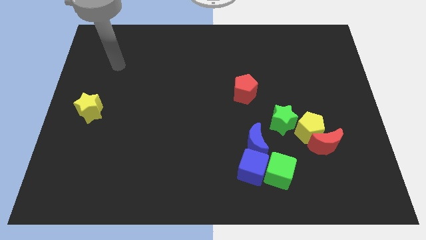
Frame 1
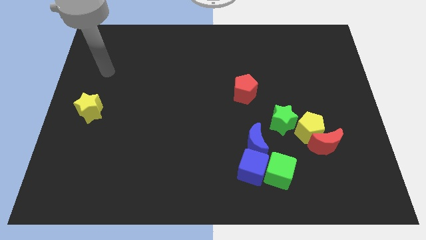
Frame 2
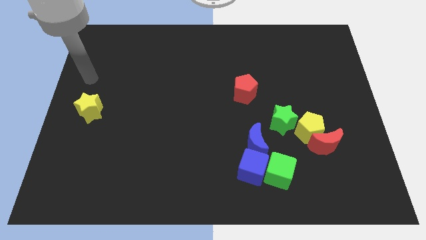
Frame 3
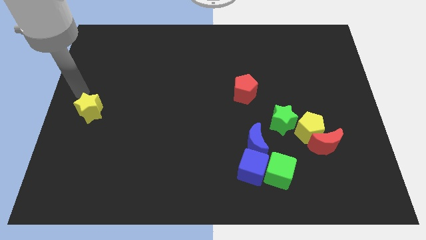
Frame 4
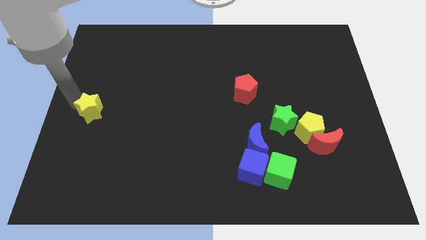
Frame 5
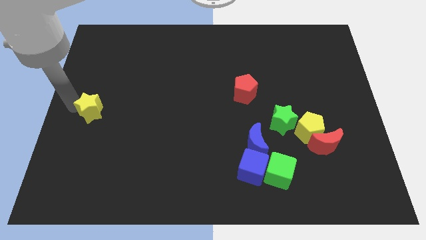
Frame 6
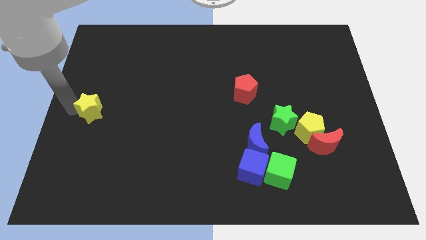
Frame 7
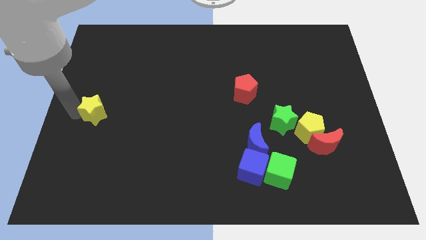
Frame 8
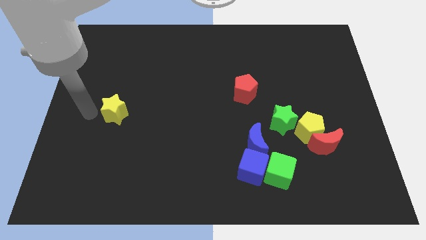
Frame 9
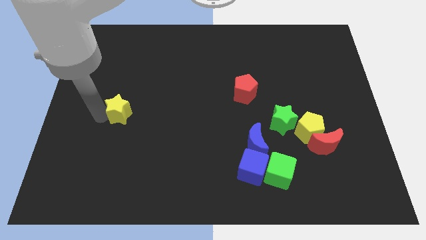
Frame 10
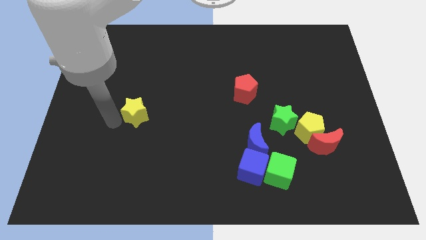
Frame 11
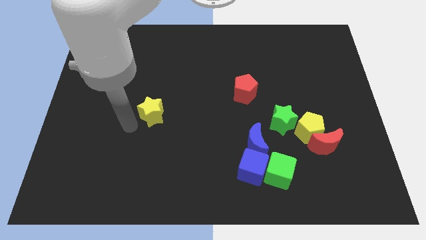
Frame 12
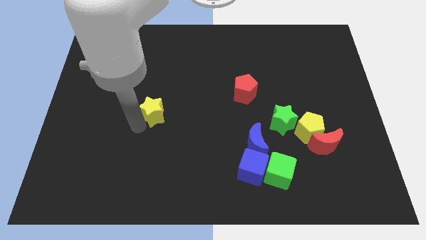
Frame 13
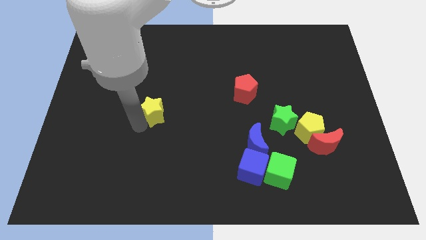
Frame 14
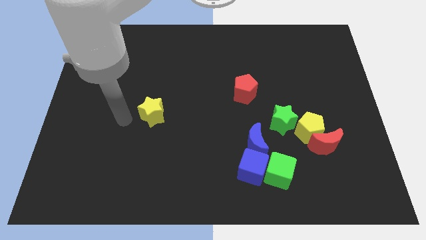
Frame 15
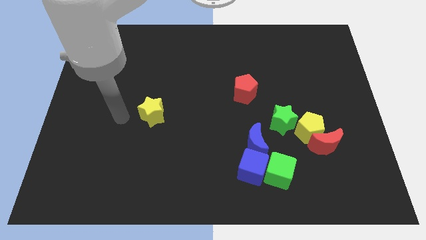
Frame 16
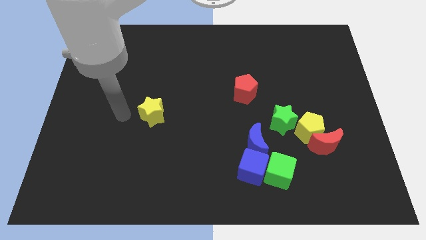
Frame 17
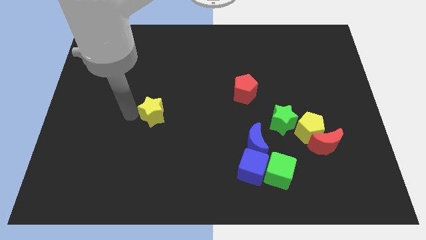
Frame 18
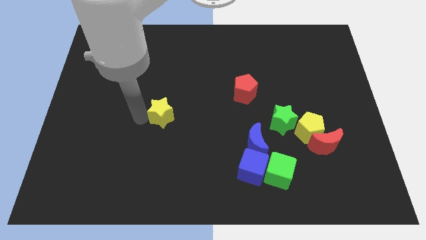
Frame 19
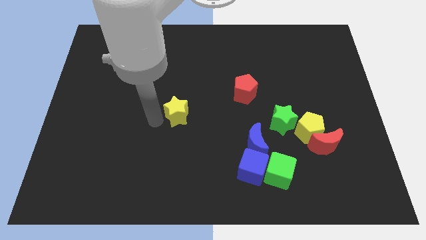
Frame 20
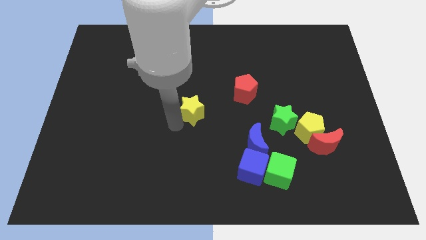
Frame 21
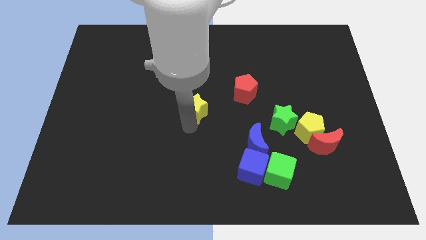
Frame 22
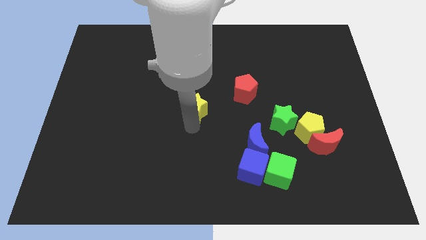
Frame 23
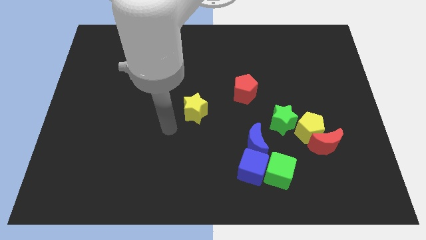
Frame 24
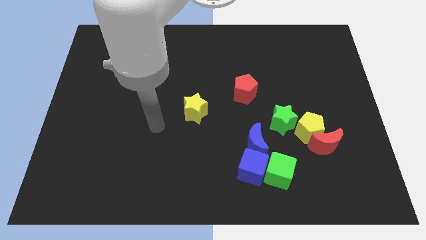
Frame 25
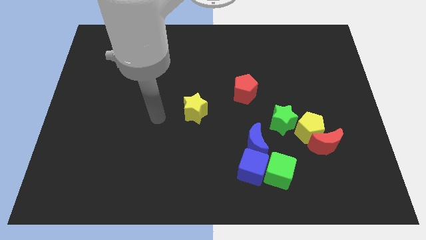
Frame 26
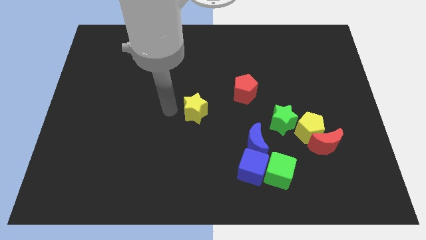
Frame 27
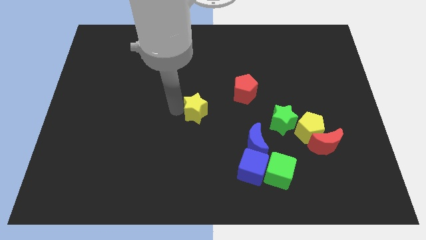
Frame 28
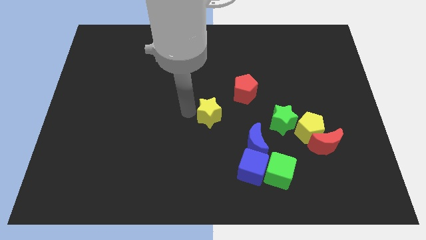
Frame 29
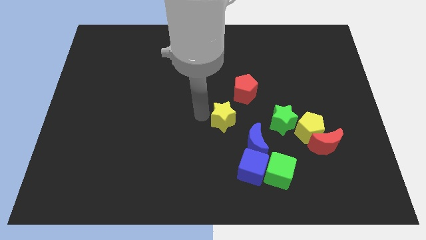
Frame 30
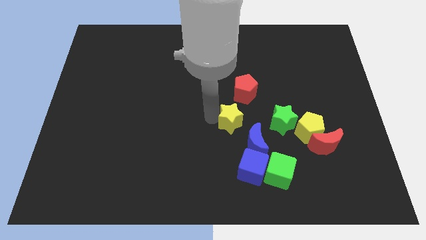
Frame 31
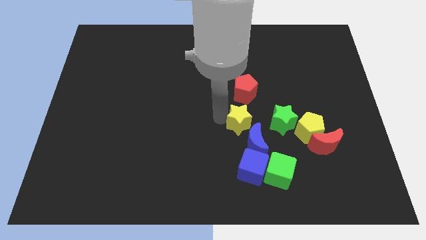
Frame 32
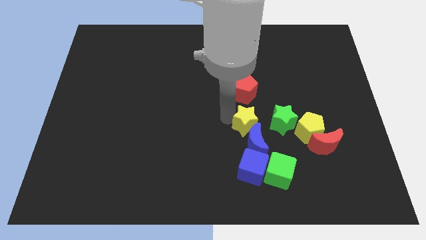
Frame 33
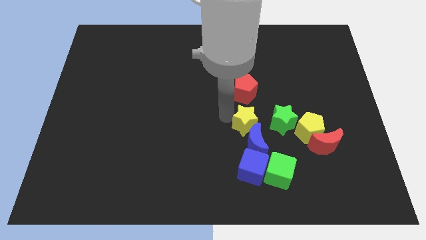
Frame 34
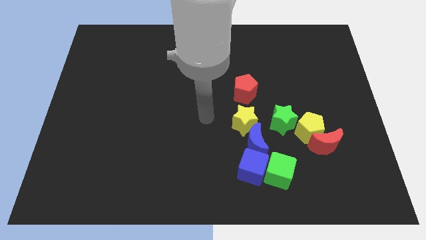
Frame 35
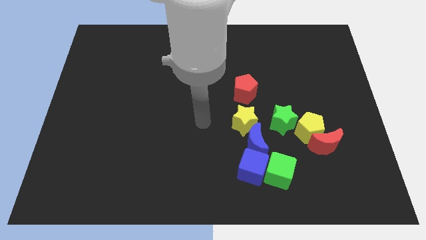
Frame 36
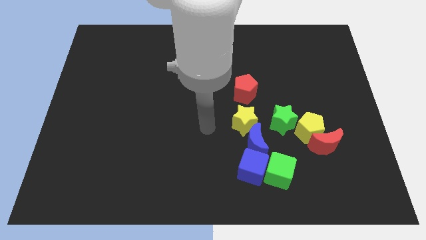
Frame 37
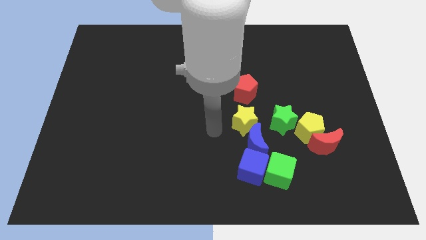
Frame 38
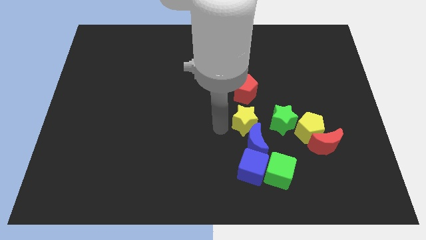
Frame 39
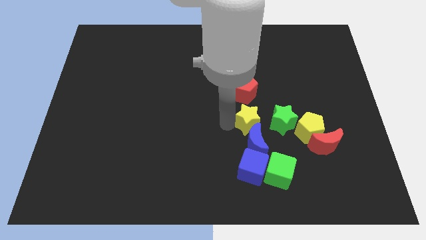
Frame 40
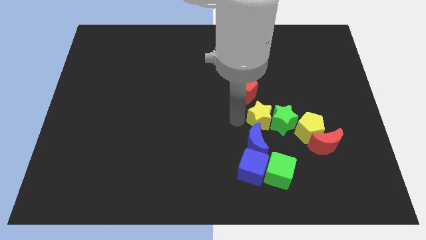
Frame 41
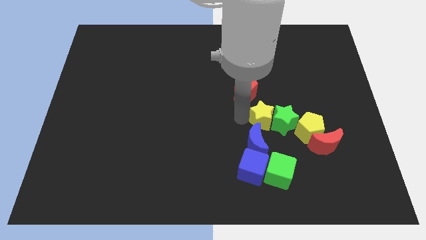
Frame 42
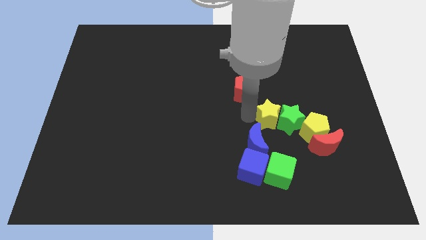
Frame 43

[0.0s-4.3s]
move the yellow star towards the green star

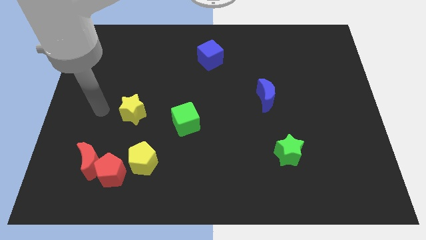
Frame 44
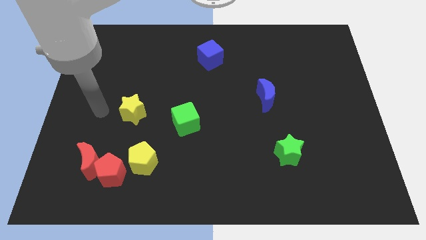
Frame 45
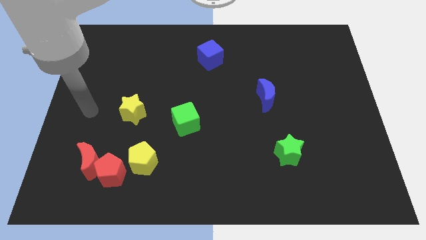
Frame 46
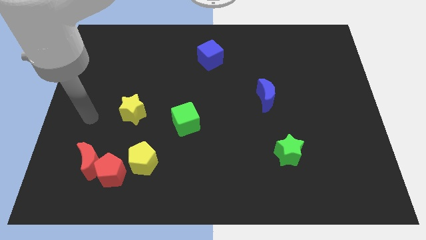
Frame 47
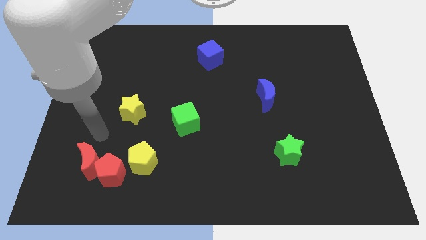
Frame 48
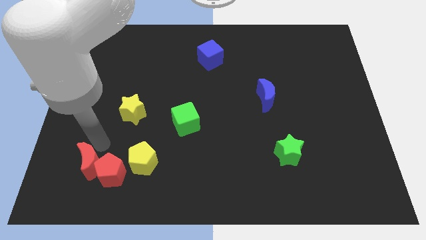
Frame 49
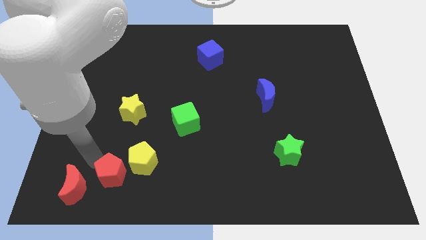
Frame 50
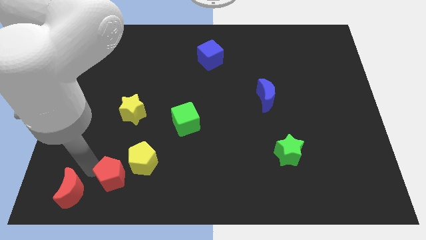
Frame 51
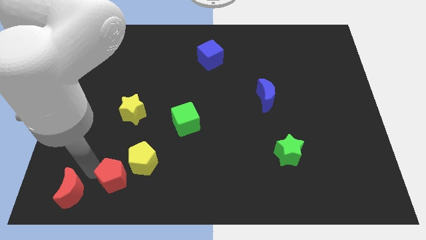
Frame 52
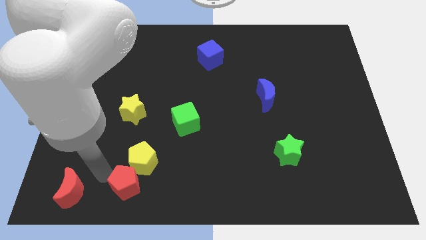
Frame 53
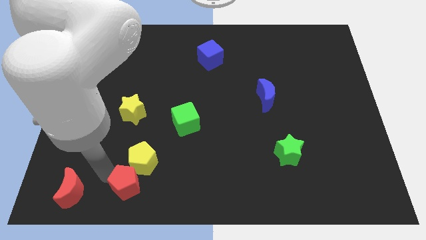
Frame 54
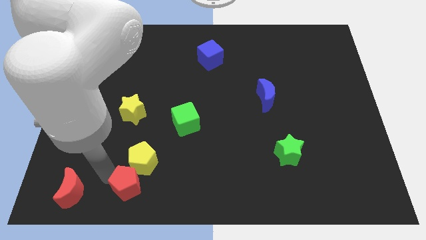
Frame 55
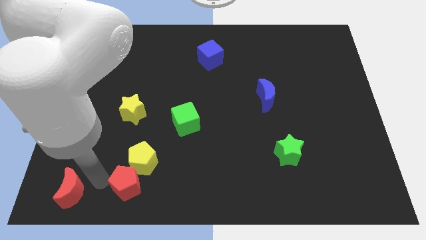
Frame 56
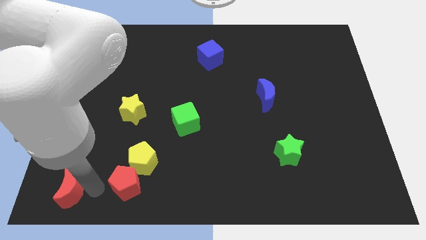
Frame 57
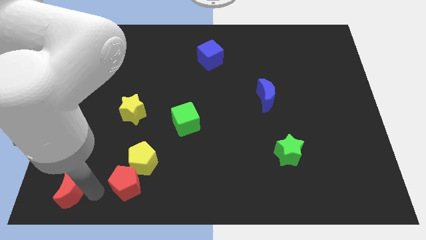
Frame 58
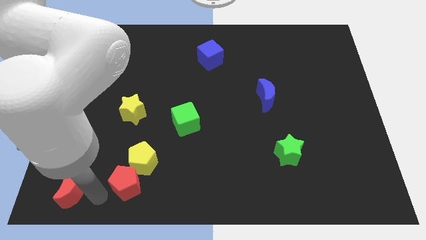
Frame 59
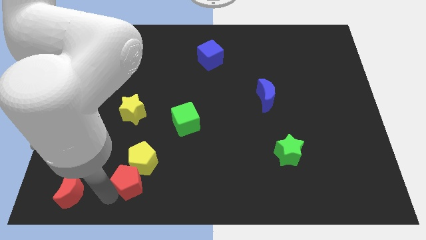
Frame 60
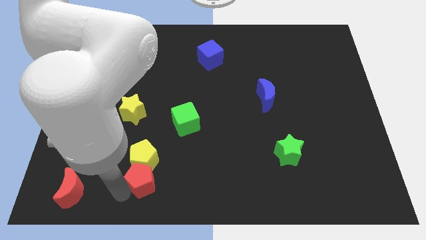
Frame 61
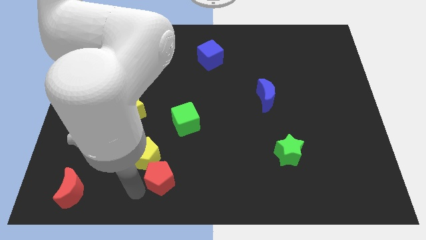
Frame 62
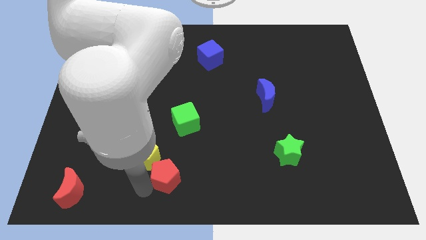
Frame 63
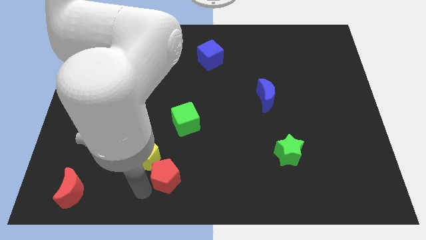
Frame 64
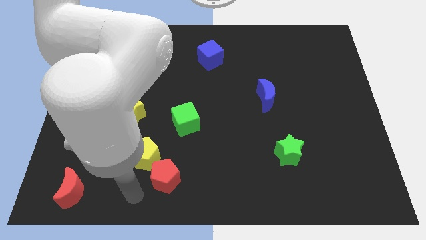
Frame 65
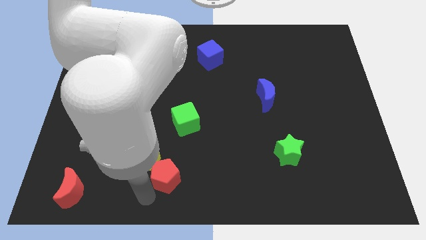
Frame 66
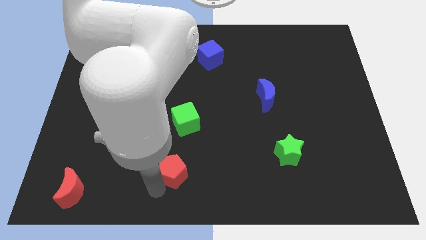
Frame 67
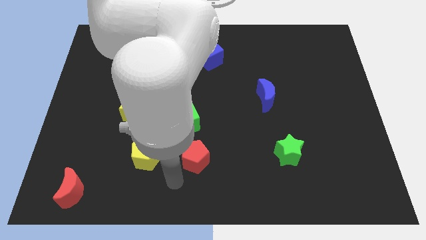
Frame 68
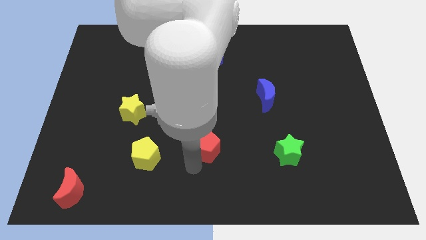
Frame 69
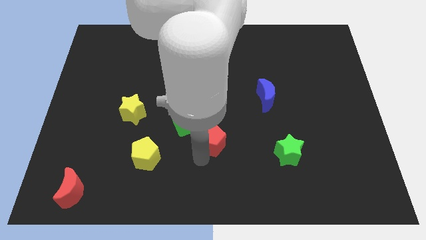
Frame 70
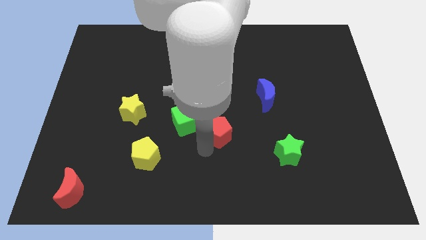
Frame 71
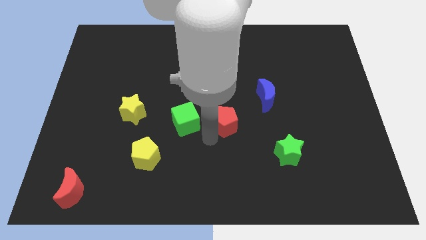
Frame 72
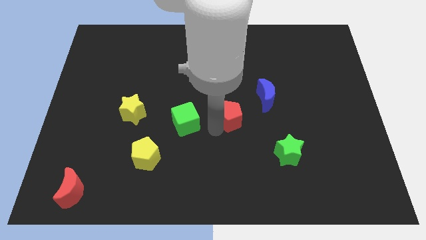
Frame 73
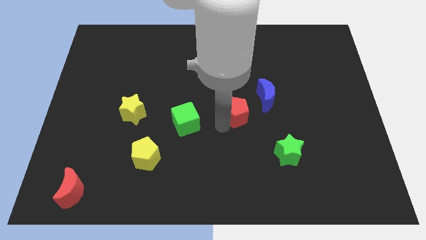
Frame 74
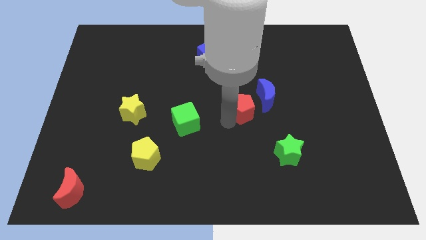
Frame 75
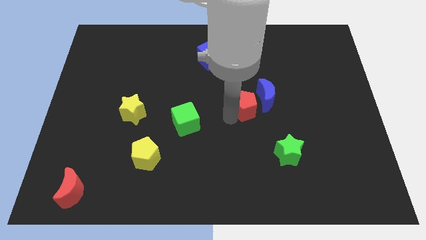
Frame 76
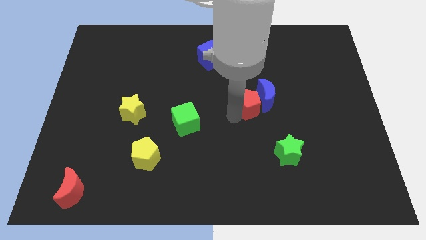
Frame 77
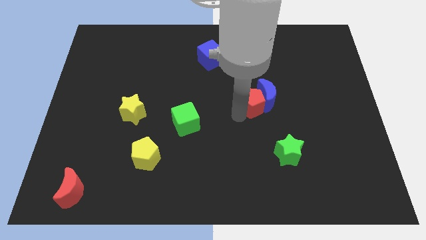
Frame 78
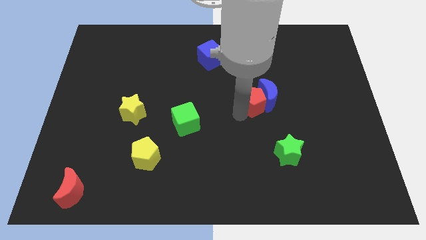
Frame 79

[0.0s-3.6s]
move the red pentagon close to the blue moon

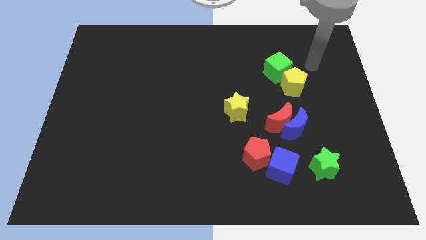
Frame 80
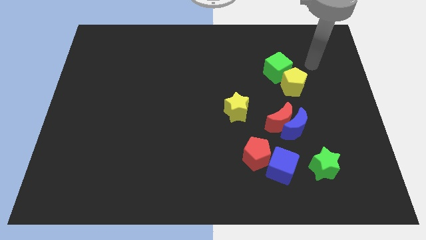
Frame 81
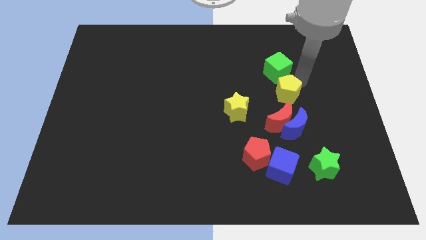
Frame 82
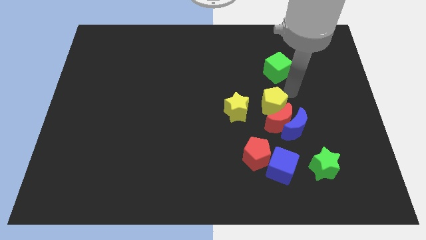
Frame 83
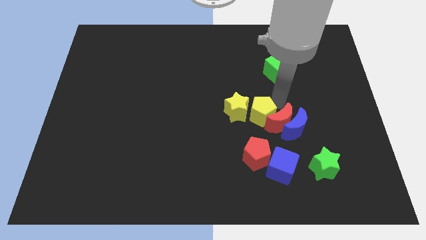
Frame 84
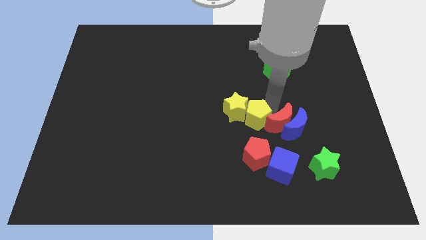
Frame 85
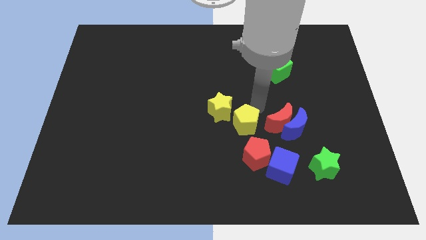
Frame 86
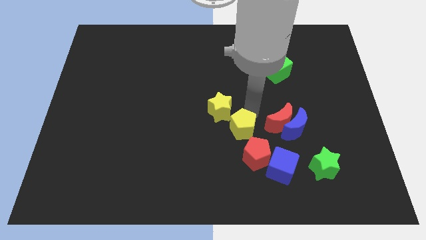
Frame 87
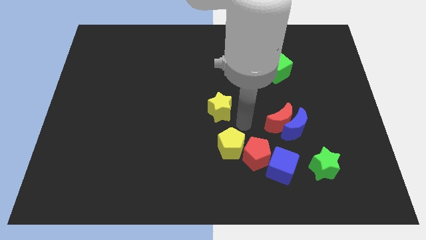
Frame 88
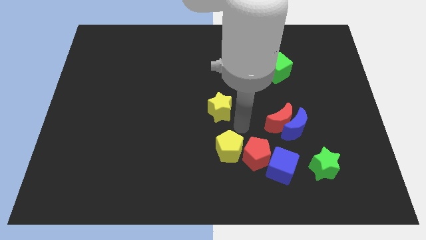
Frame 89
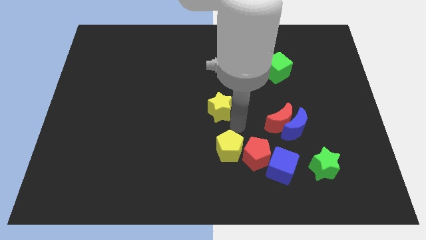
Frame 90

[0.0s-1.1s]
put the yellow pentagon next to the red pentagon
